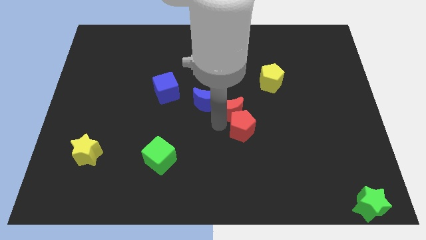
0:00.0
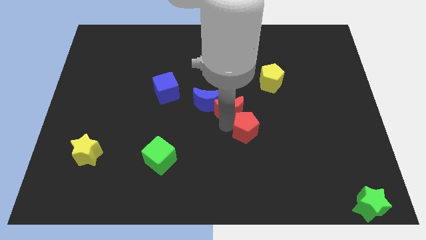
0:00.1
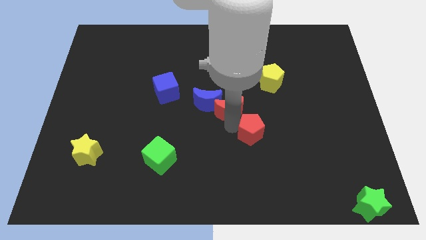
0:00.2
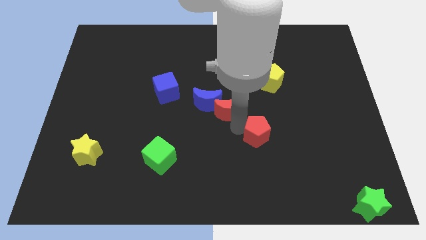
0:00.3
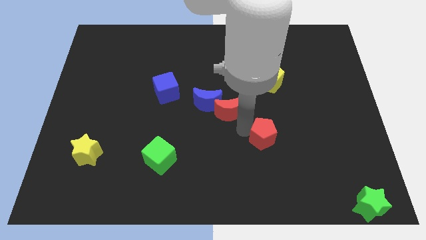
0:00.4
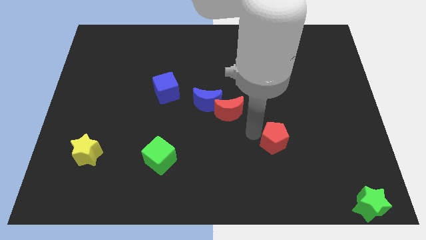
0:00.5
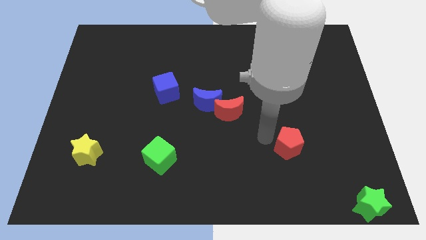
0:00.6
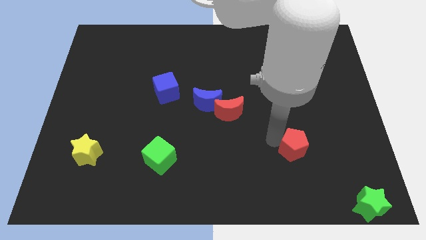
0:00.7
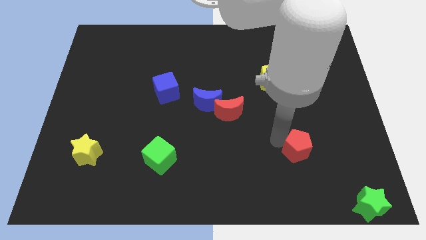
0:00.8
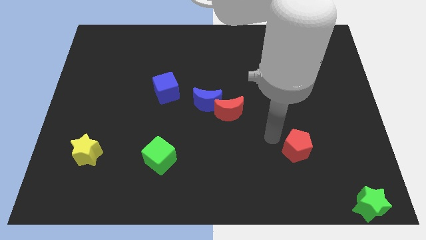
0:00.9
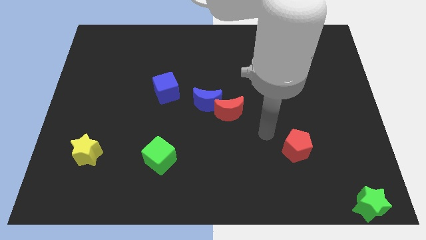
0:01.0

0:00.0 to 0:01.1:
separate the red pentagon from the red crescent

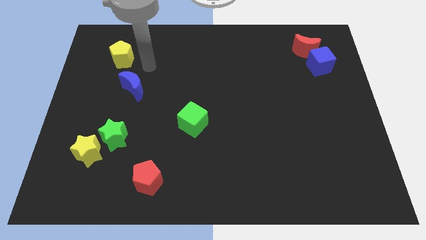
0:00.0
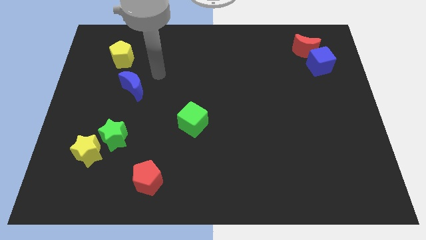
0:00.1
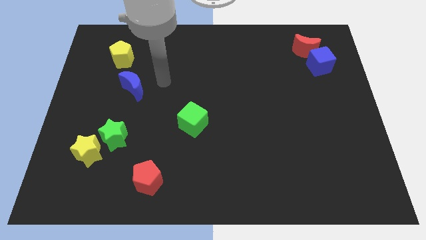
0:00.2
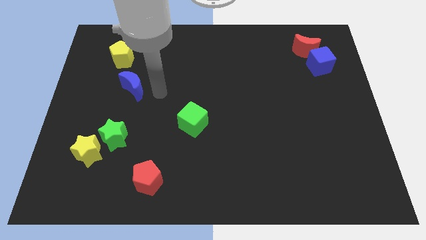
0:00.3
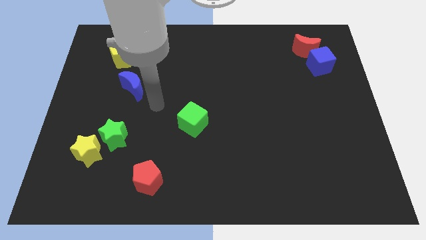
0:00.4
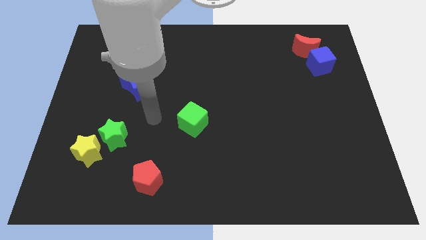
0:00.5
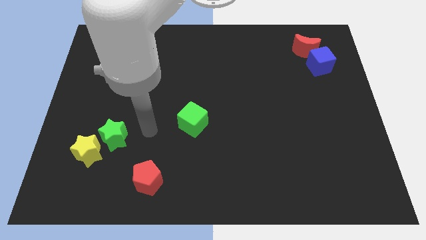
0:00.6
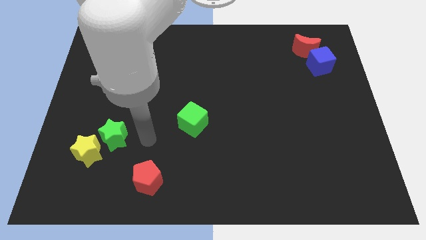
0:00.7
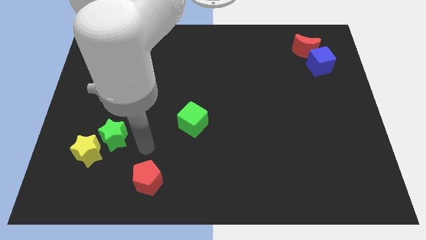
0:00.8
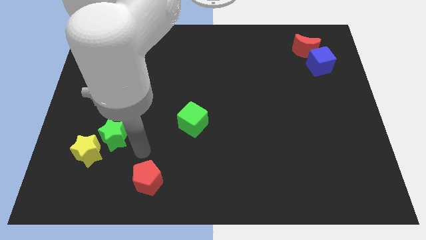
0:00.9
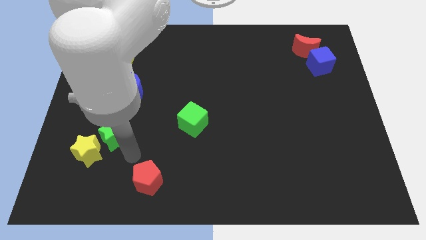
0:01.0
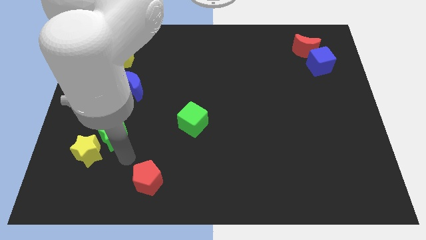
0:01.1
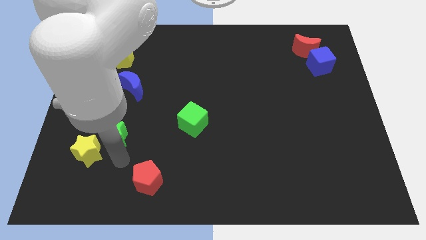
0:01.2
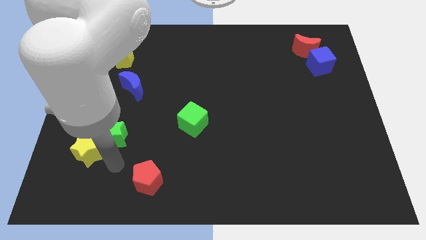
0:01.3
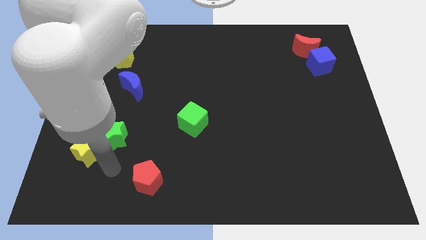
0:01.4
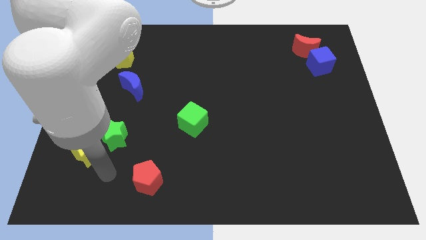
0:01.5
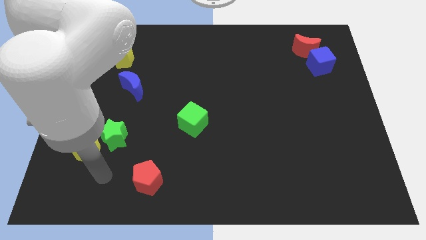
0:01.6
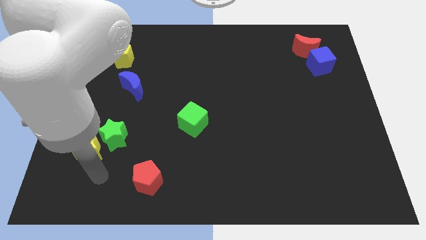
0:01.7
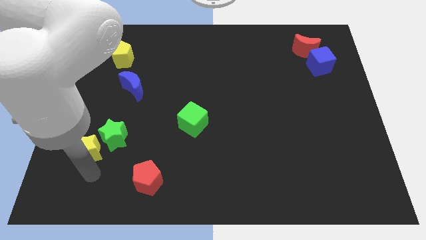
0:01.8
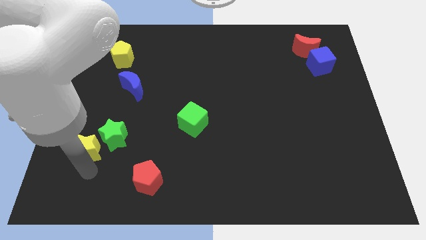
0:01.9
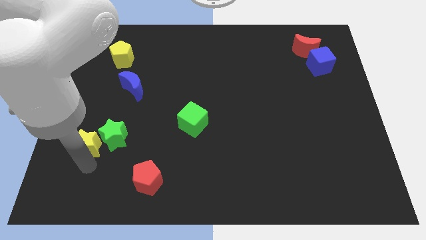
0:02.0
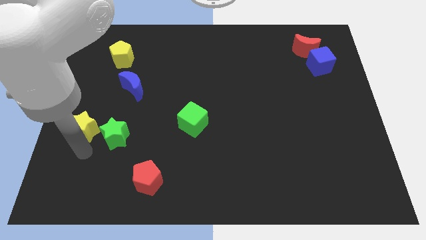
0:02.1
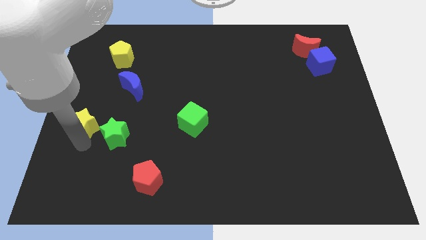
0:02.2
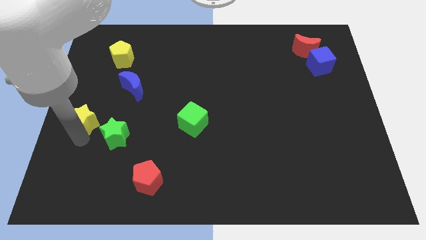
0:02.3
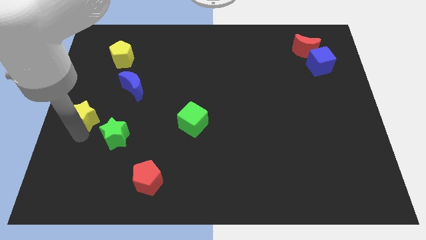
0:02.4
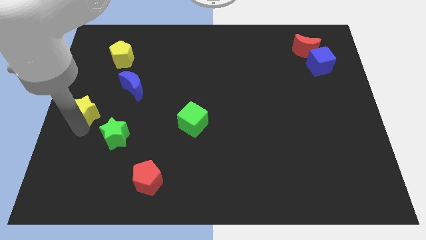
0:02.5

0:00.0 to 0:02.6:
move yellow star diagonally above green star

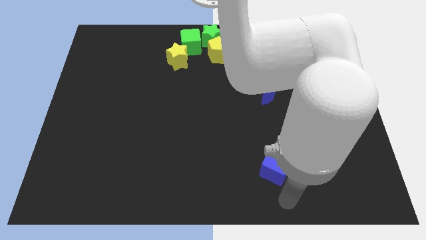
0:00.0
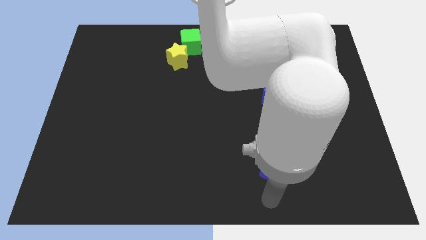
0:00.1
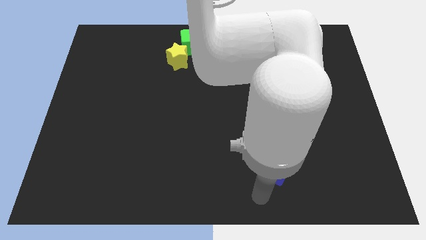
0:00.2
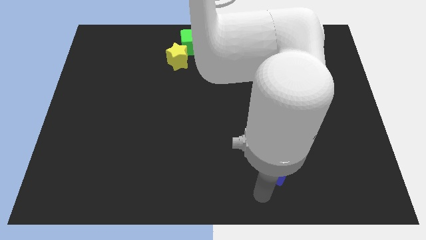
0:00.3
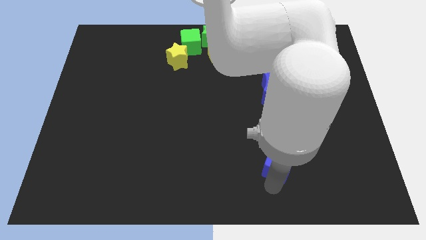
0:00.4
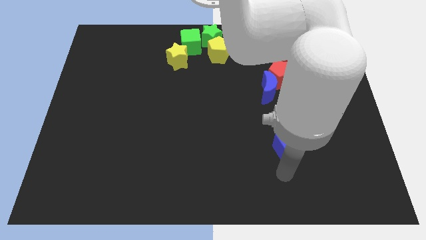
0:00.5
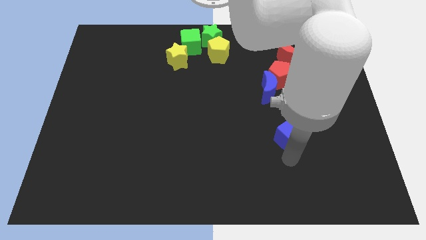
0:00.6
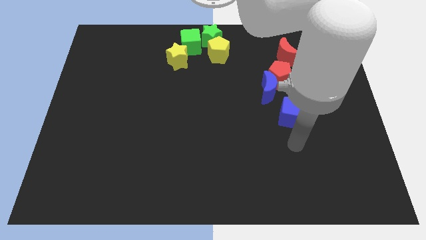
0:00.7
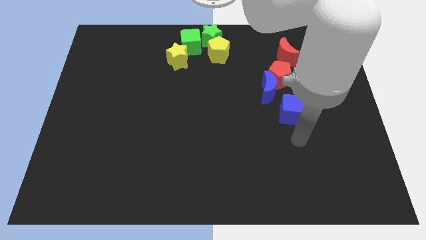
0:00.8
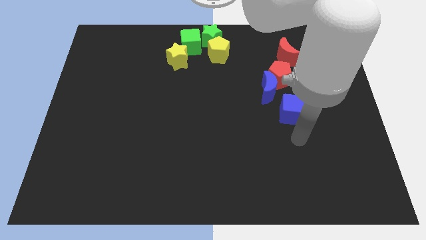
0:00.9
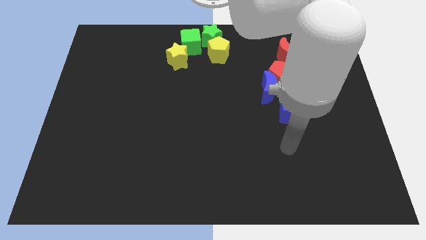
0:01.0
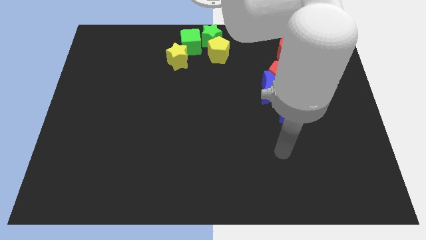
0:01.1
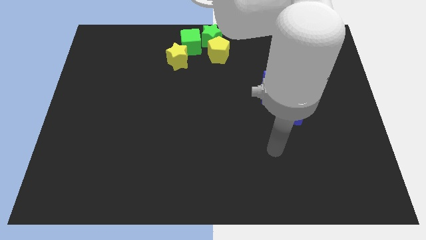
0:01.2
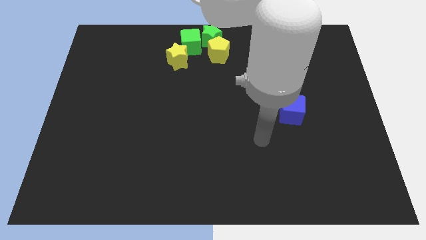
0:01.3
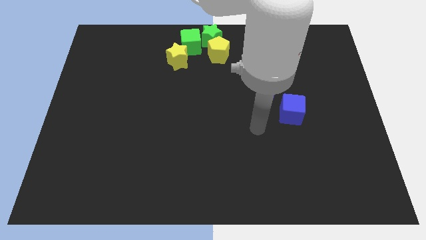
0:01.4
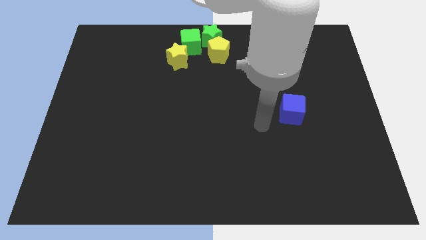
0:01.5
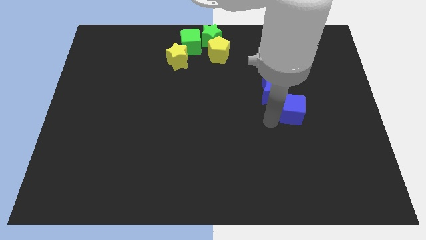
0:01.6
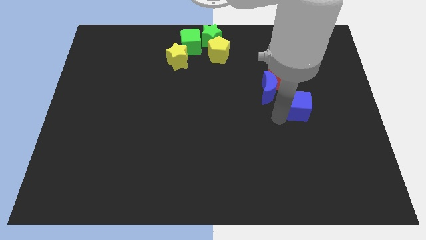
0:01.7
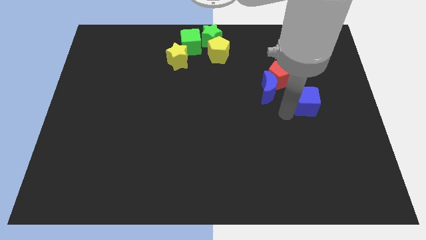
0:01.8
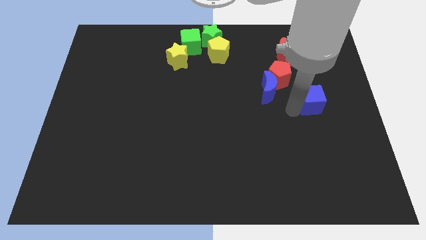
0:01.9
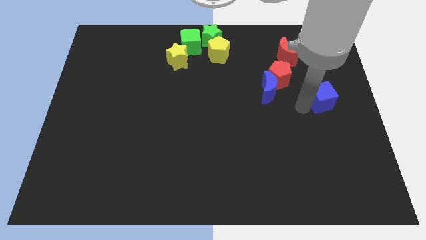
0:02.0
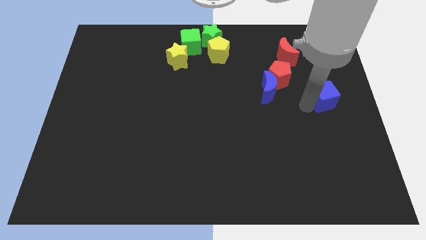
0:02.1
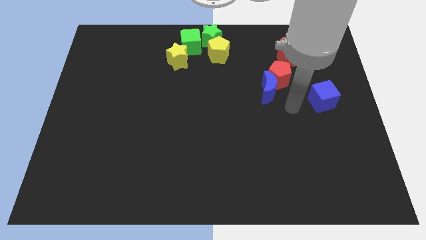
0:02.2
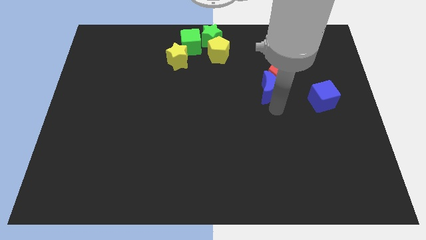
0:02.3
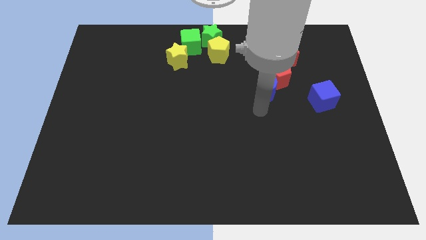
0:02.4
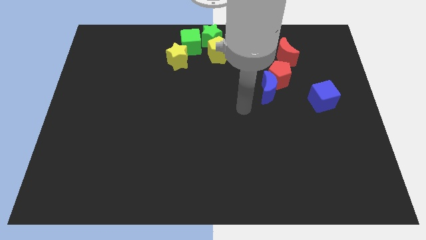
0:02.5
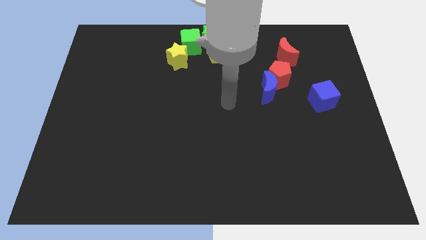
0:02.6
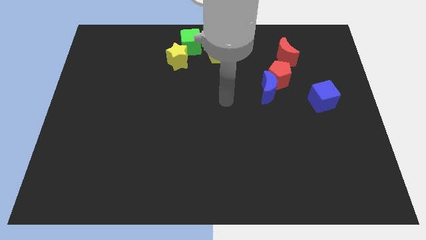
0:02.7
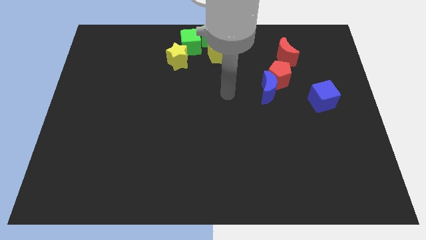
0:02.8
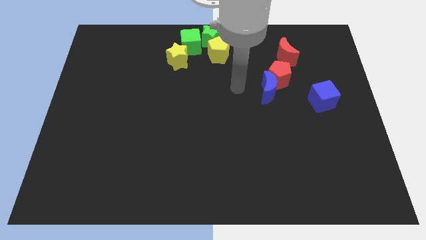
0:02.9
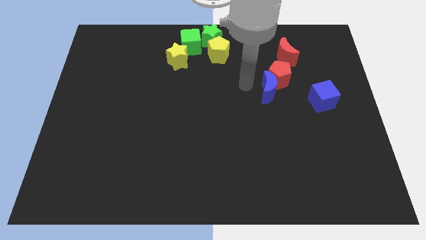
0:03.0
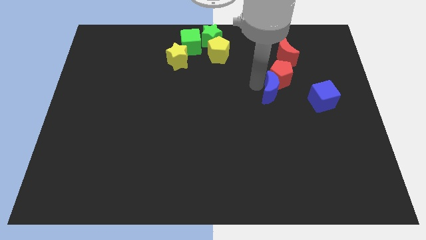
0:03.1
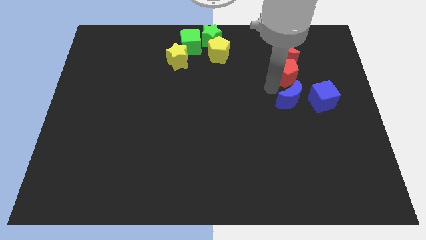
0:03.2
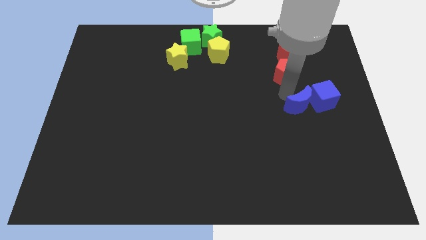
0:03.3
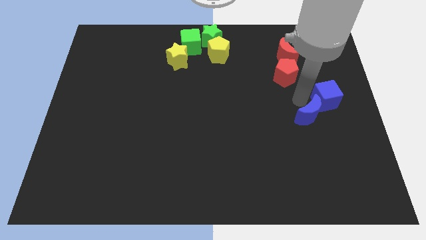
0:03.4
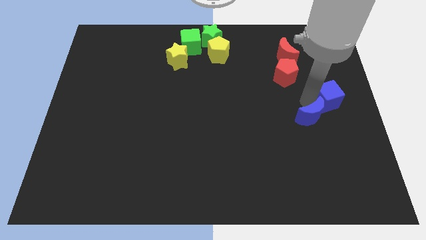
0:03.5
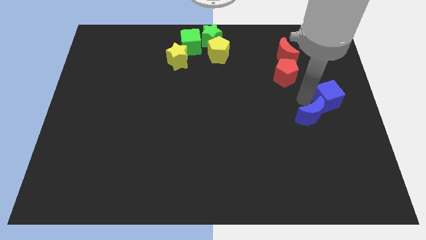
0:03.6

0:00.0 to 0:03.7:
move the blue blocks to the bottom right of the red pentagon

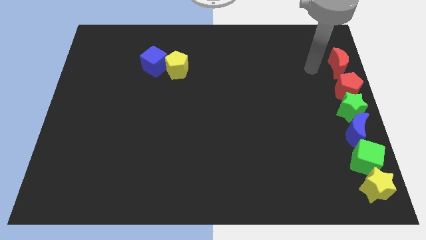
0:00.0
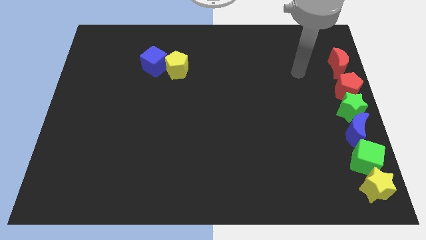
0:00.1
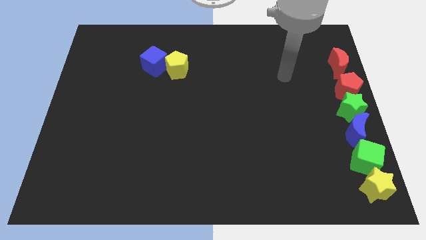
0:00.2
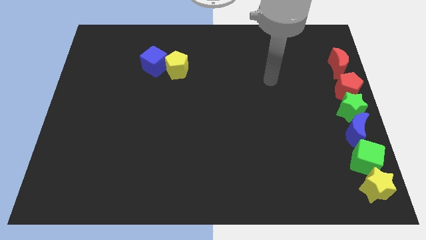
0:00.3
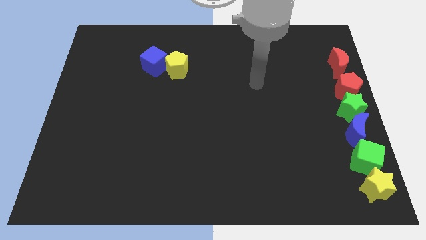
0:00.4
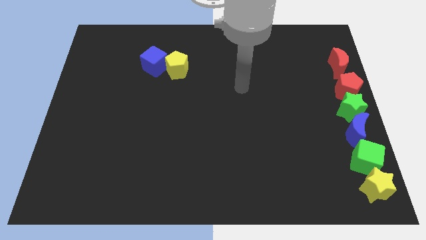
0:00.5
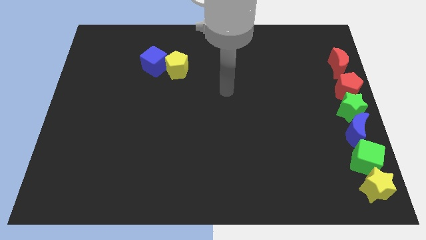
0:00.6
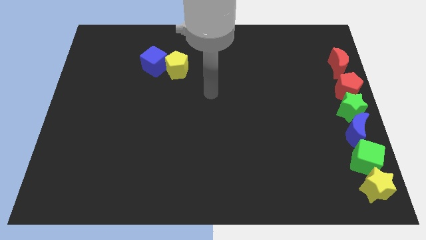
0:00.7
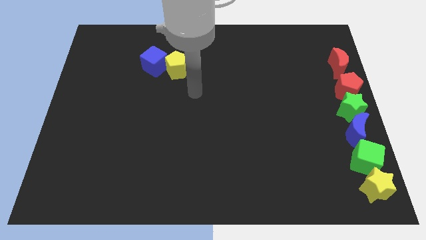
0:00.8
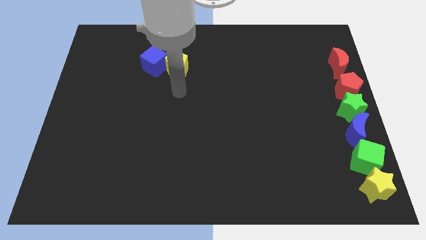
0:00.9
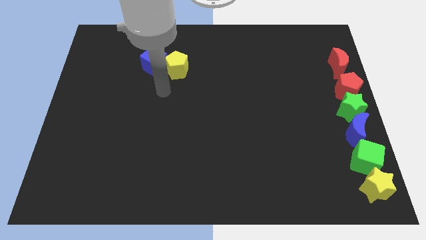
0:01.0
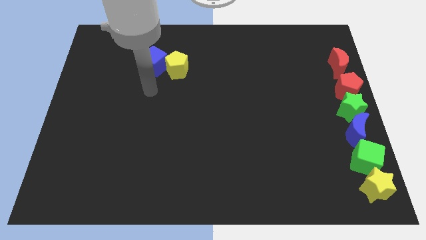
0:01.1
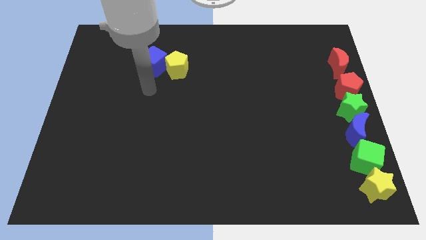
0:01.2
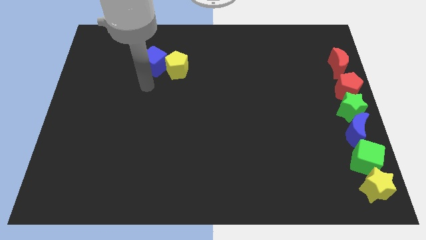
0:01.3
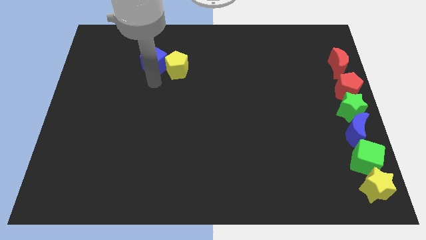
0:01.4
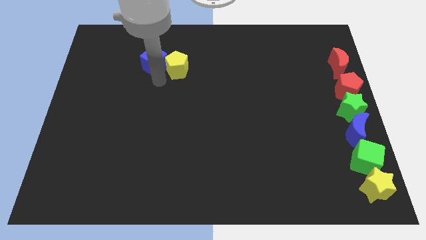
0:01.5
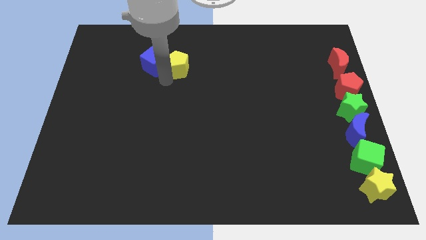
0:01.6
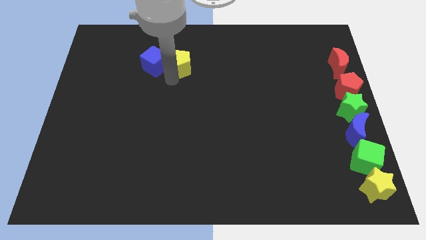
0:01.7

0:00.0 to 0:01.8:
point your arm below yellow pentagon
